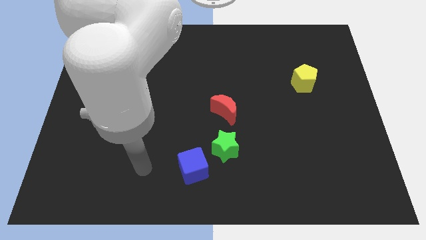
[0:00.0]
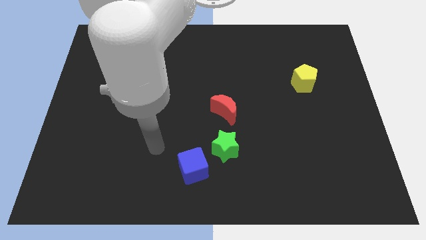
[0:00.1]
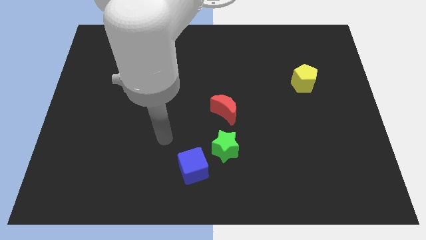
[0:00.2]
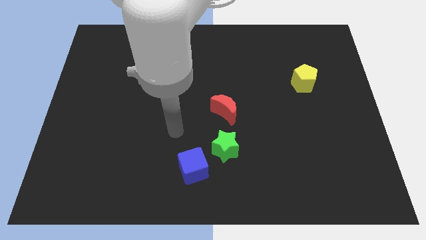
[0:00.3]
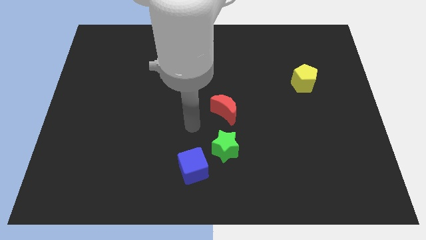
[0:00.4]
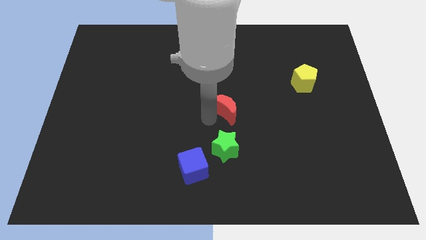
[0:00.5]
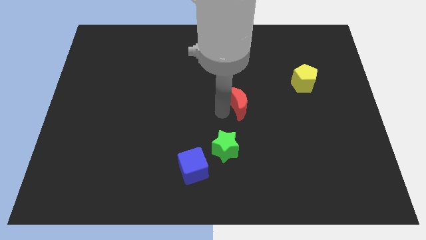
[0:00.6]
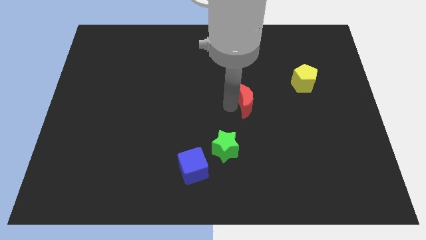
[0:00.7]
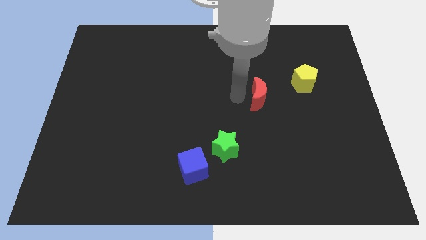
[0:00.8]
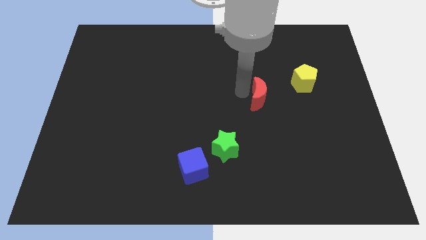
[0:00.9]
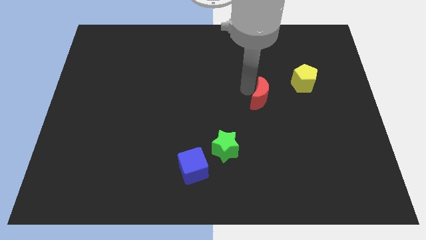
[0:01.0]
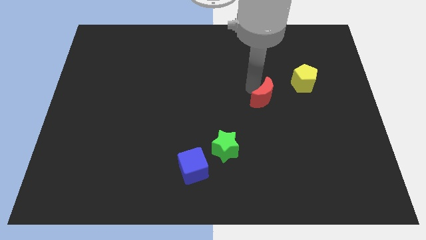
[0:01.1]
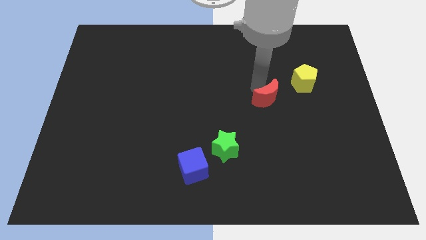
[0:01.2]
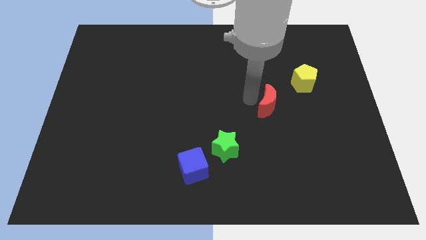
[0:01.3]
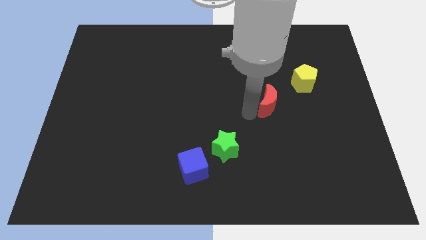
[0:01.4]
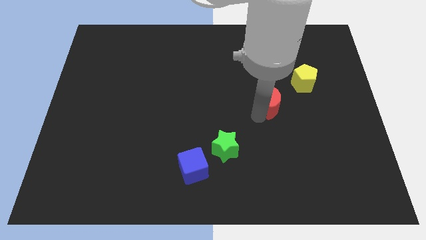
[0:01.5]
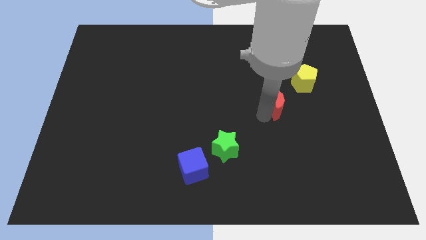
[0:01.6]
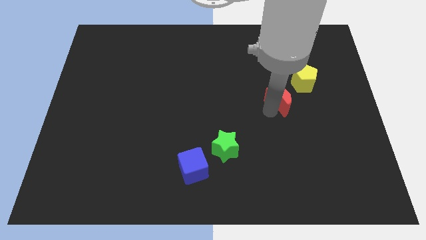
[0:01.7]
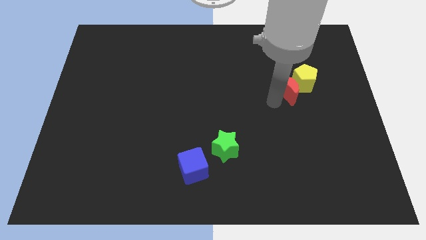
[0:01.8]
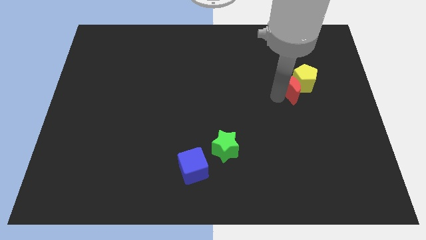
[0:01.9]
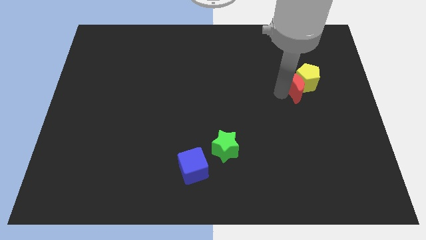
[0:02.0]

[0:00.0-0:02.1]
slide the moon close to the yellow pentagon

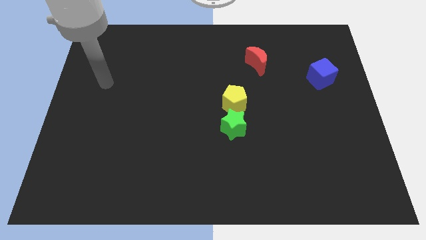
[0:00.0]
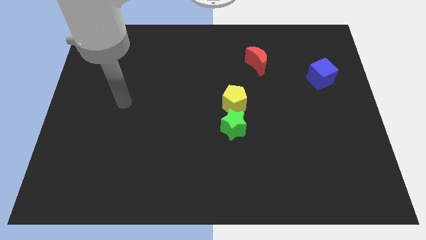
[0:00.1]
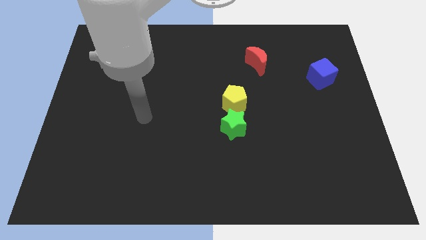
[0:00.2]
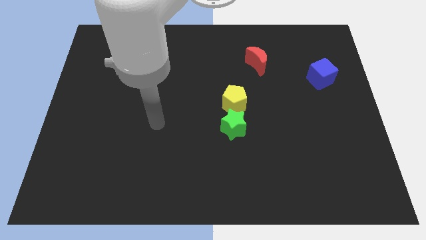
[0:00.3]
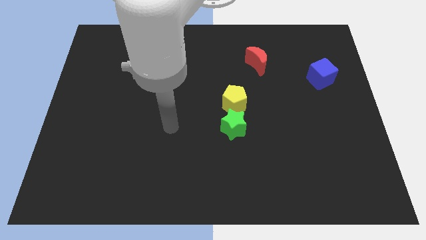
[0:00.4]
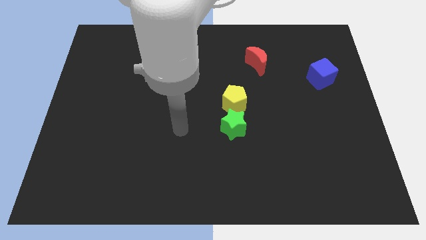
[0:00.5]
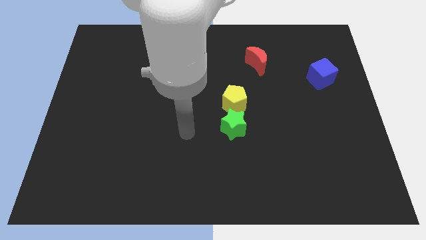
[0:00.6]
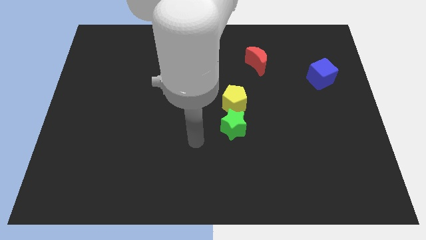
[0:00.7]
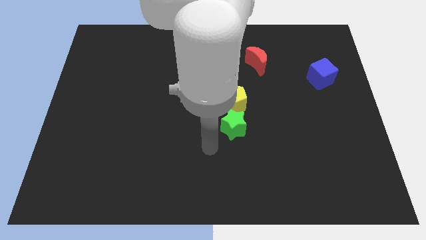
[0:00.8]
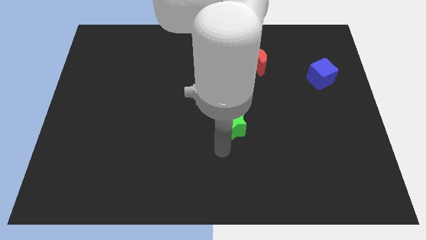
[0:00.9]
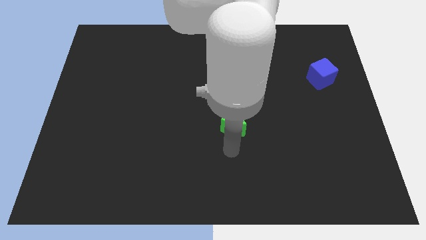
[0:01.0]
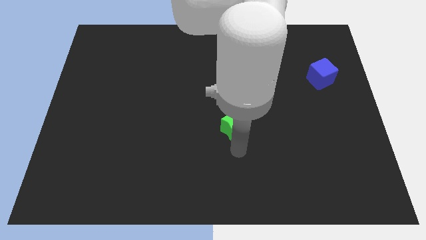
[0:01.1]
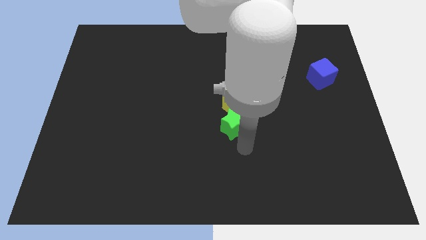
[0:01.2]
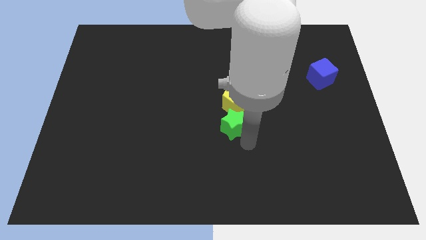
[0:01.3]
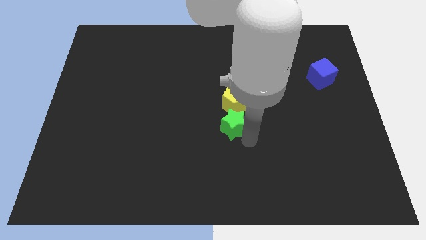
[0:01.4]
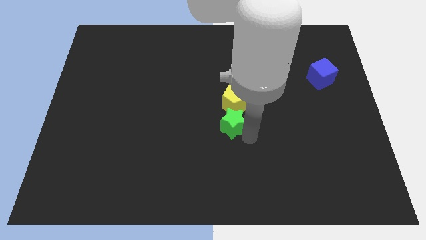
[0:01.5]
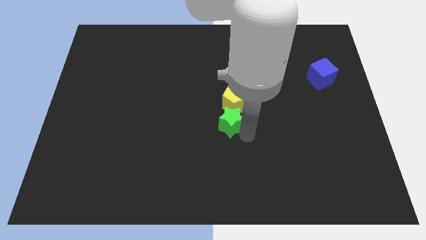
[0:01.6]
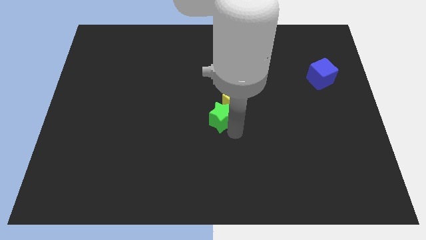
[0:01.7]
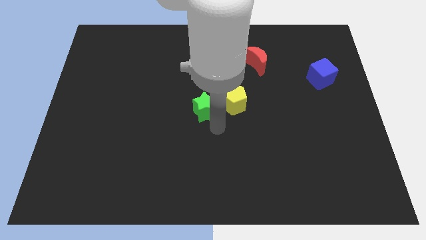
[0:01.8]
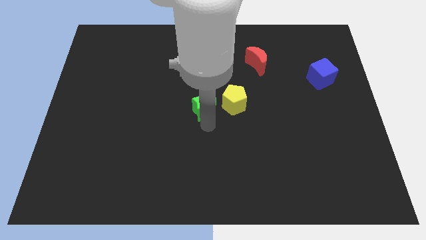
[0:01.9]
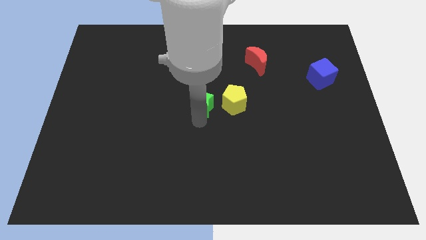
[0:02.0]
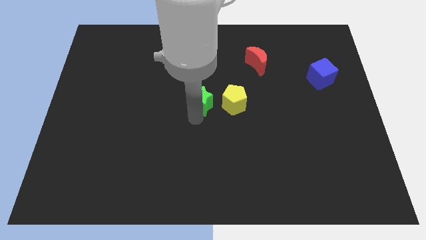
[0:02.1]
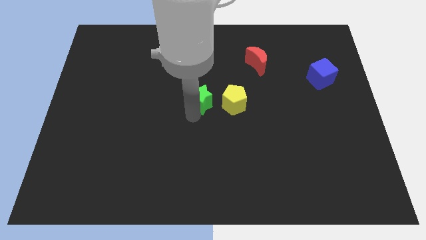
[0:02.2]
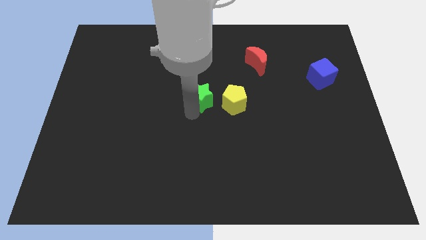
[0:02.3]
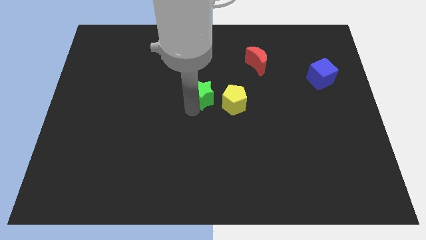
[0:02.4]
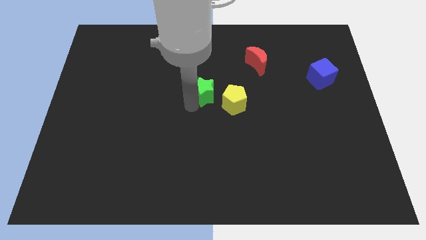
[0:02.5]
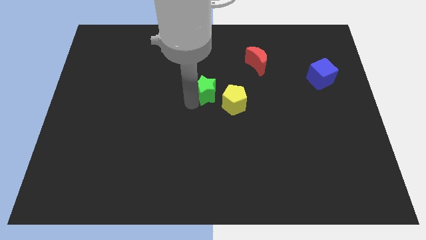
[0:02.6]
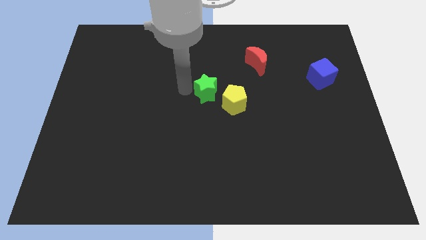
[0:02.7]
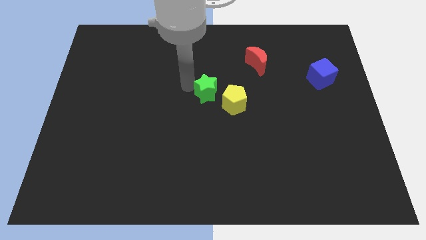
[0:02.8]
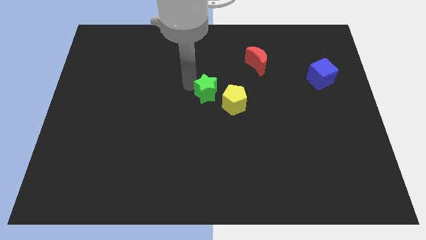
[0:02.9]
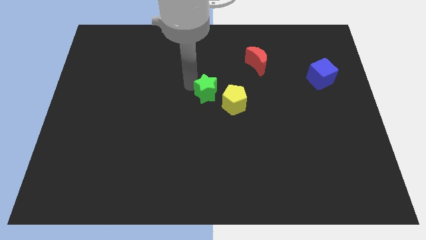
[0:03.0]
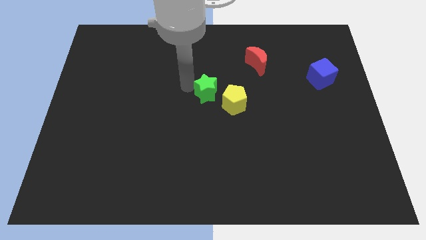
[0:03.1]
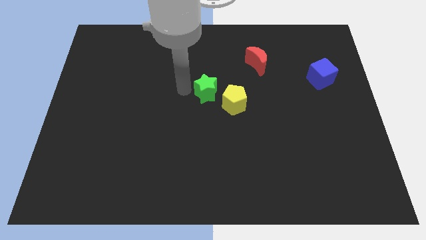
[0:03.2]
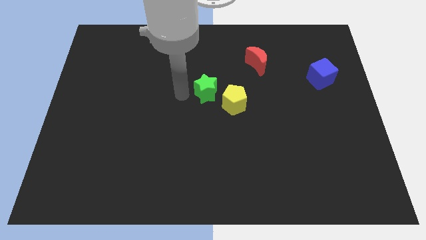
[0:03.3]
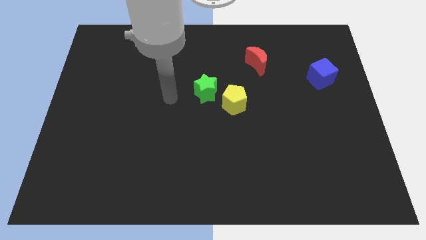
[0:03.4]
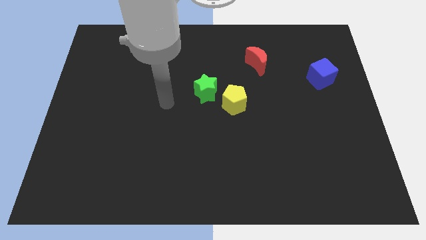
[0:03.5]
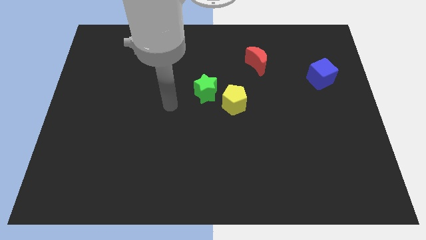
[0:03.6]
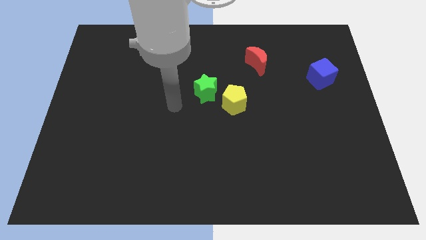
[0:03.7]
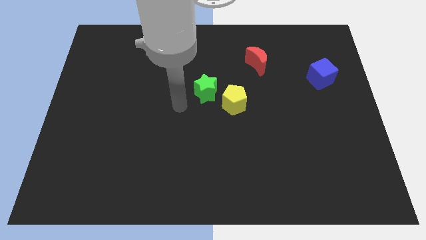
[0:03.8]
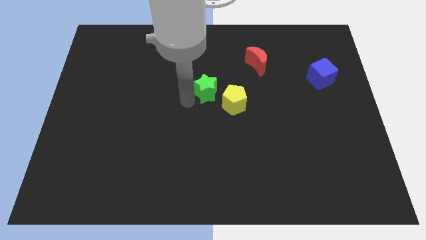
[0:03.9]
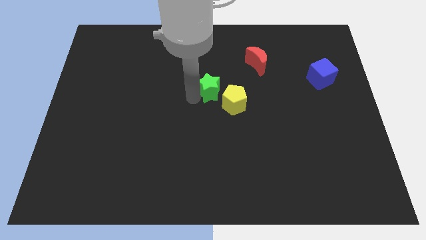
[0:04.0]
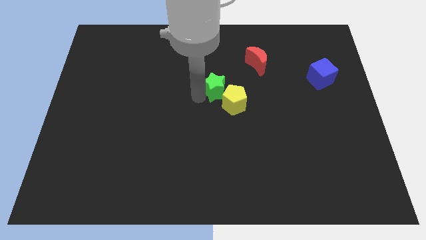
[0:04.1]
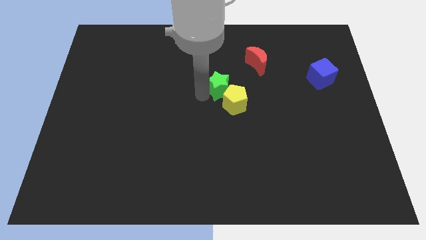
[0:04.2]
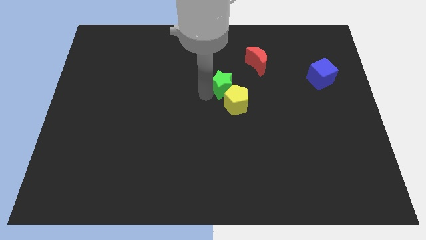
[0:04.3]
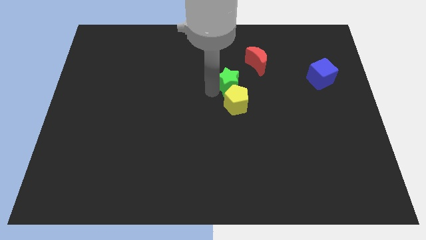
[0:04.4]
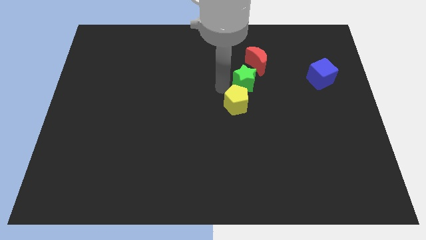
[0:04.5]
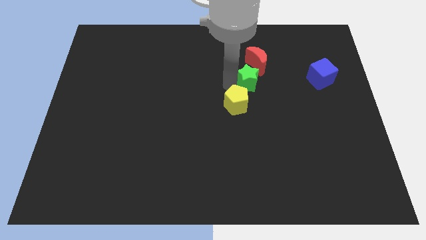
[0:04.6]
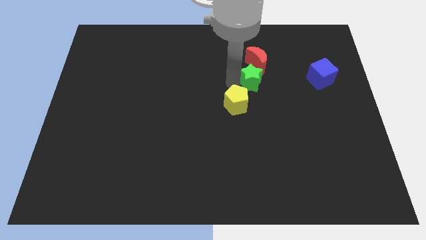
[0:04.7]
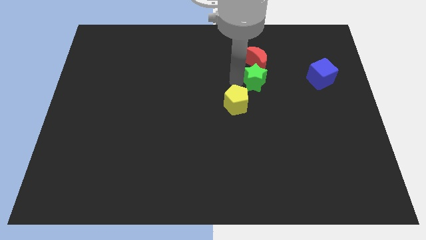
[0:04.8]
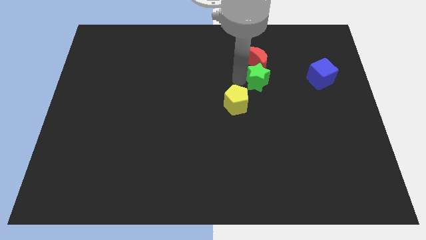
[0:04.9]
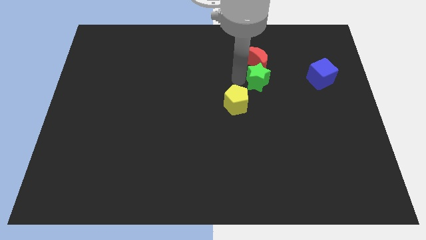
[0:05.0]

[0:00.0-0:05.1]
slide the green block to the moon

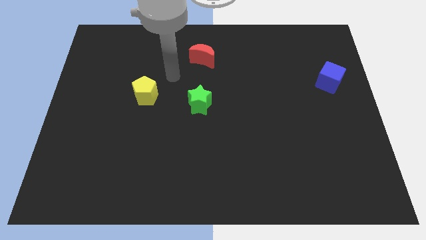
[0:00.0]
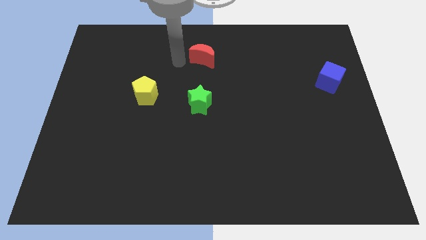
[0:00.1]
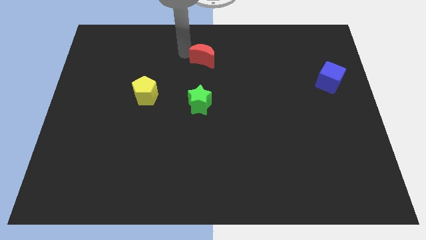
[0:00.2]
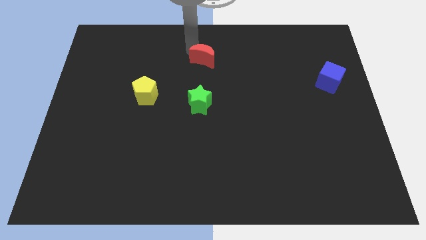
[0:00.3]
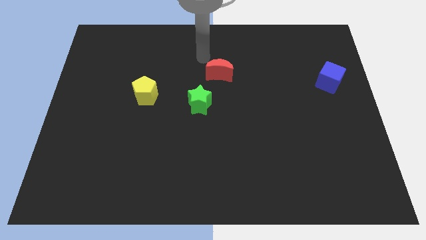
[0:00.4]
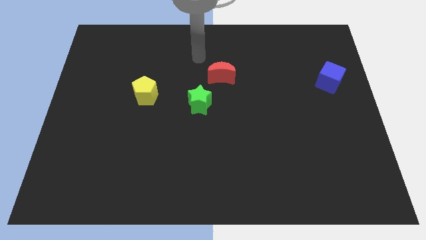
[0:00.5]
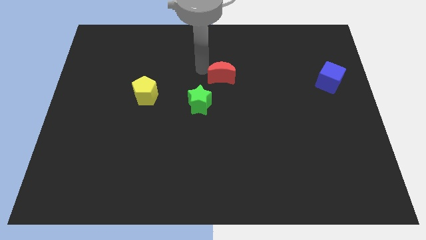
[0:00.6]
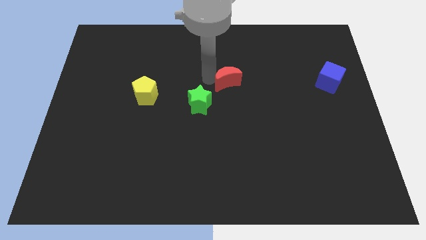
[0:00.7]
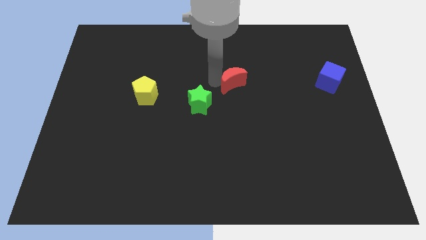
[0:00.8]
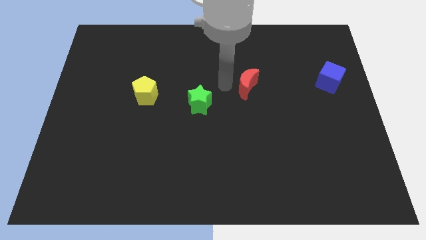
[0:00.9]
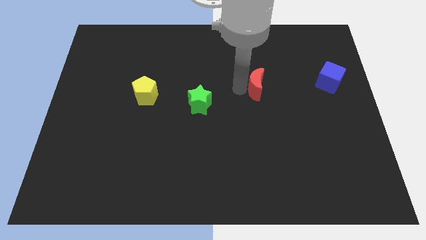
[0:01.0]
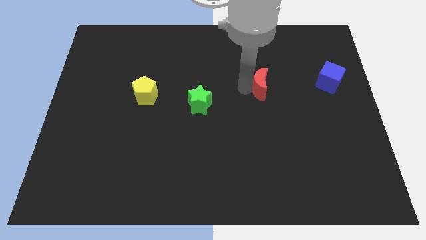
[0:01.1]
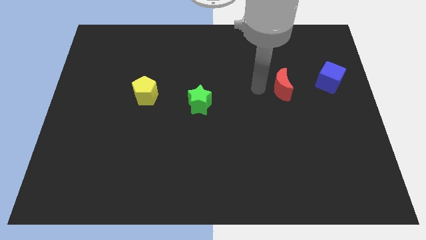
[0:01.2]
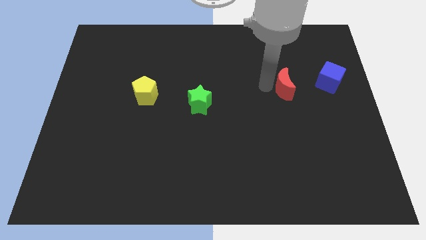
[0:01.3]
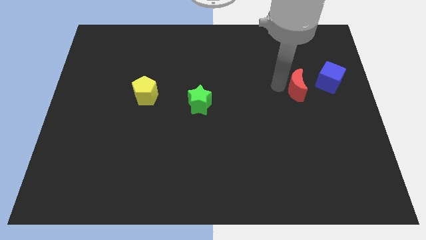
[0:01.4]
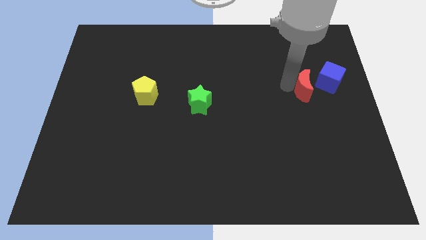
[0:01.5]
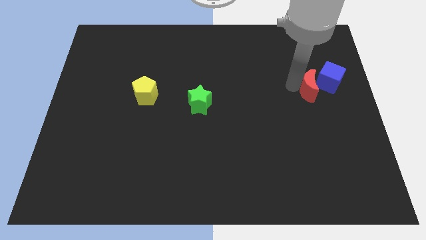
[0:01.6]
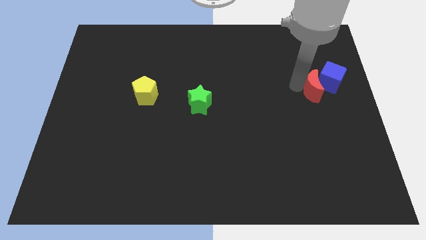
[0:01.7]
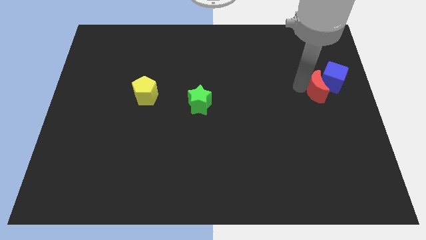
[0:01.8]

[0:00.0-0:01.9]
slide the red moon towards the cube
